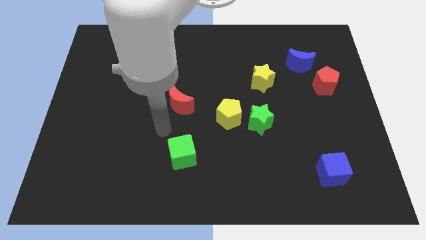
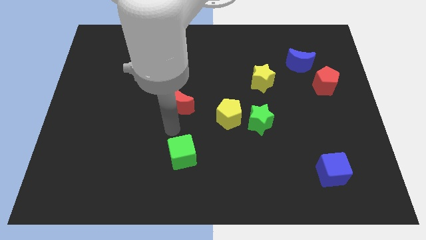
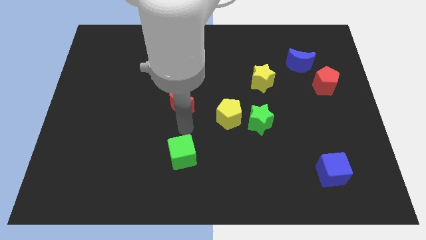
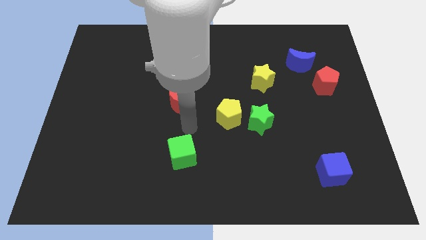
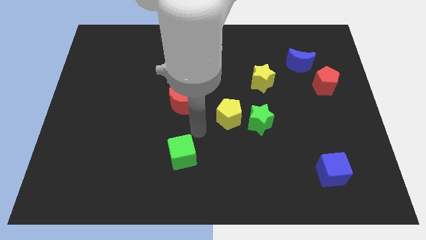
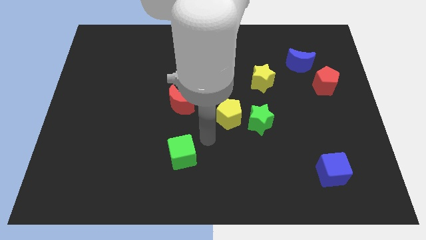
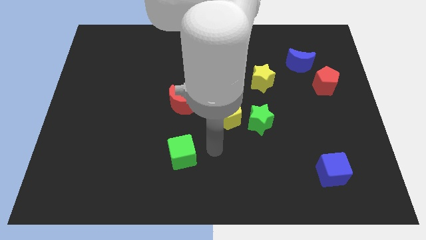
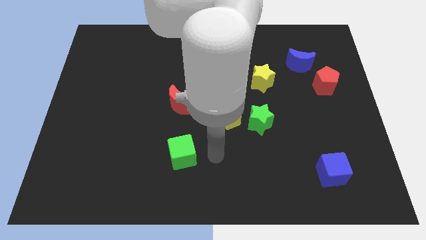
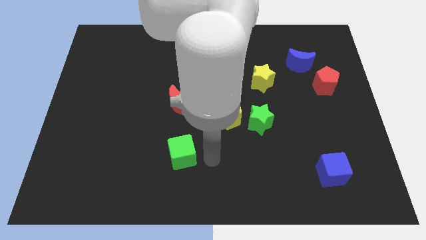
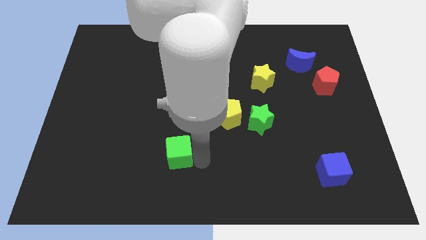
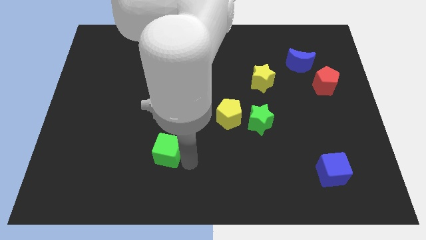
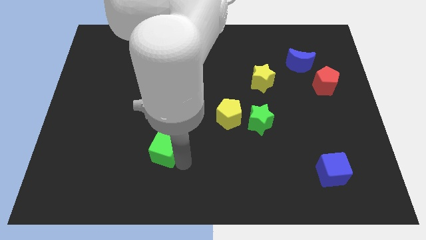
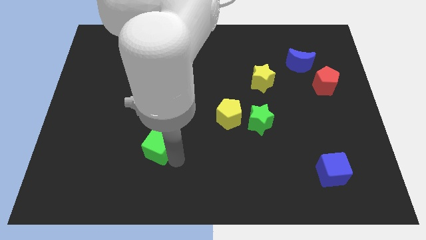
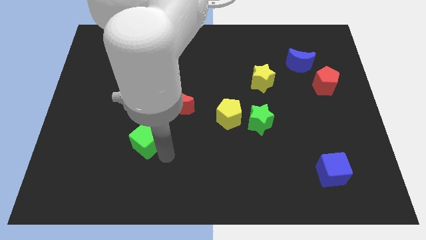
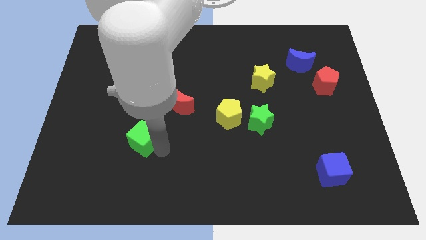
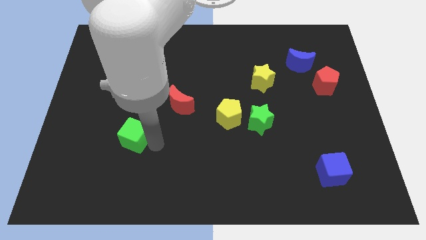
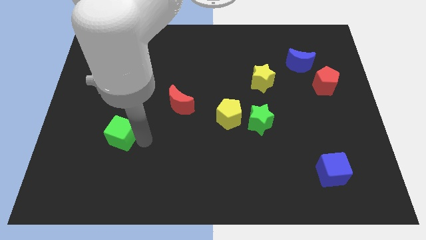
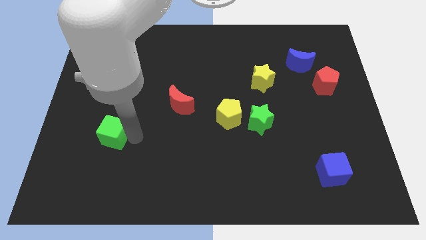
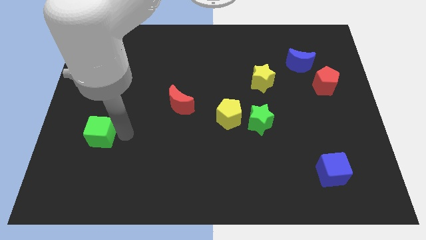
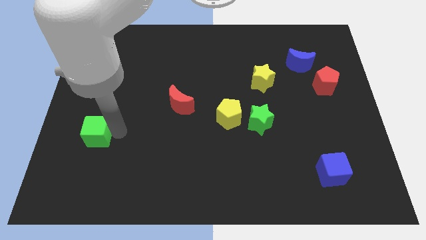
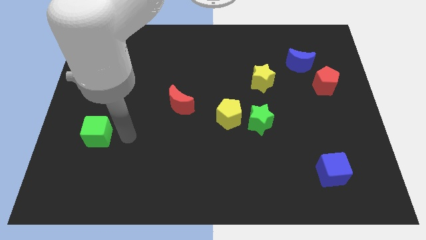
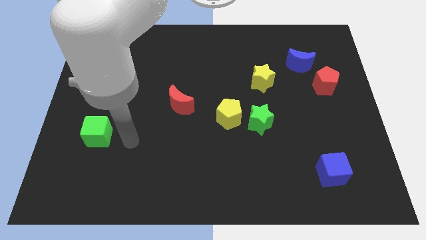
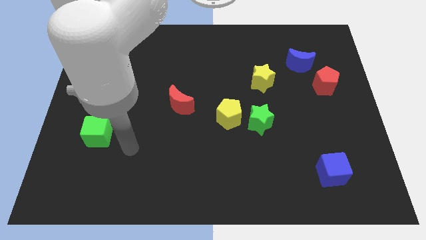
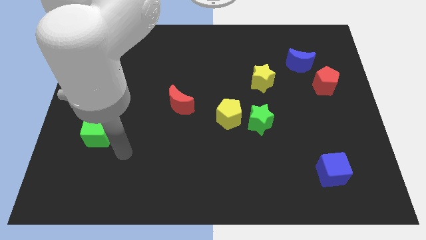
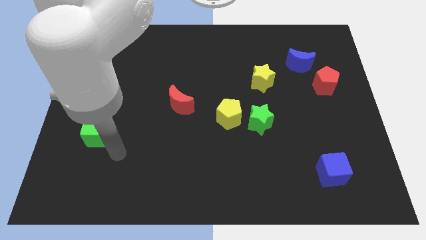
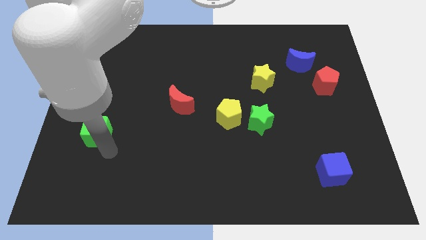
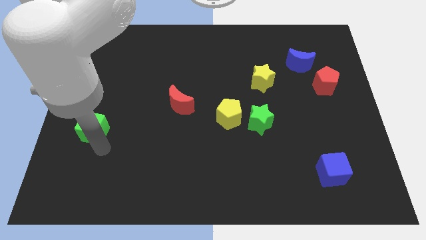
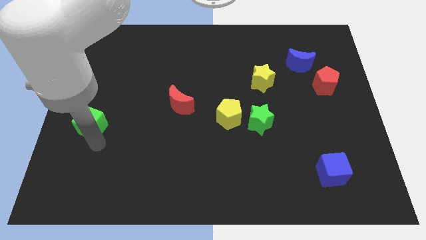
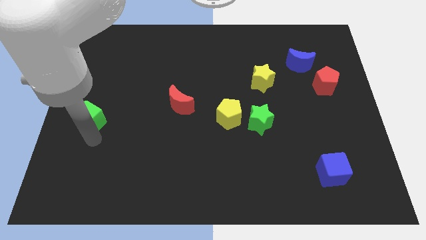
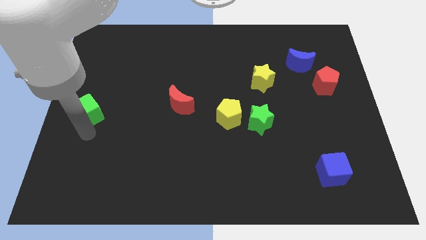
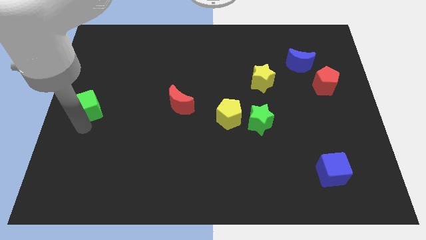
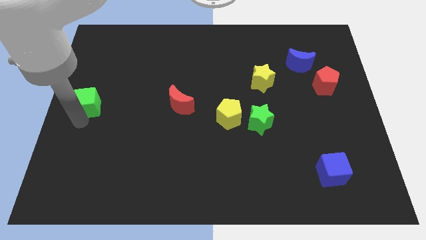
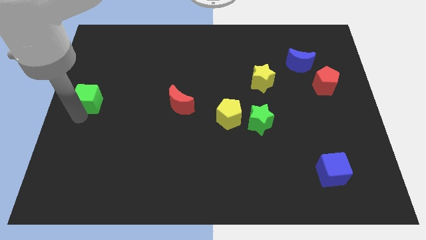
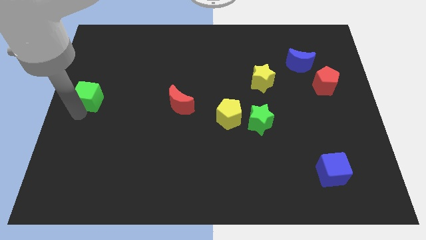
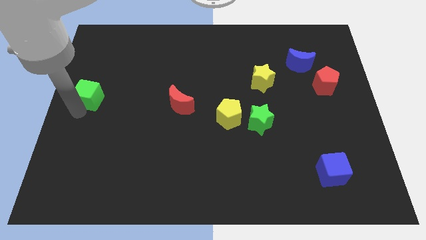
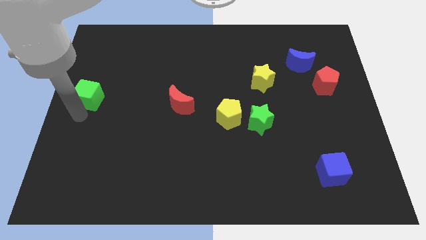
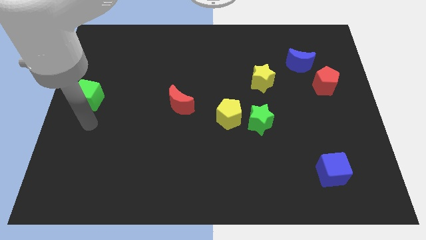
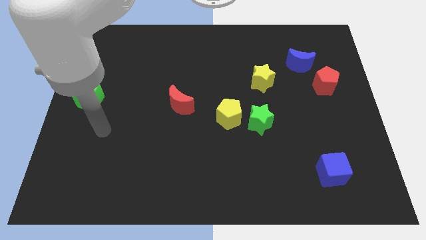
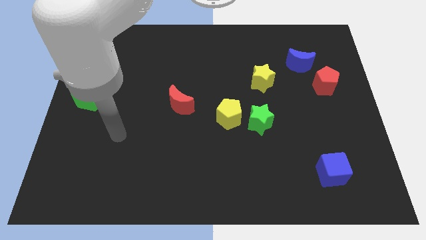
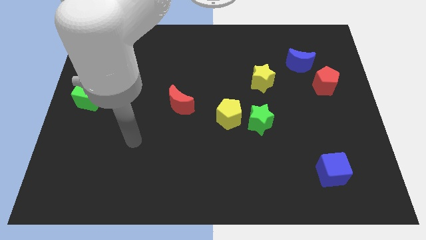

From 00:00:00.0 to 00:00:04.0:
move the green cube to the center left of the board

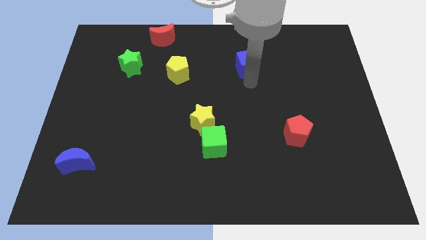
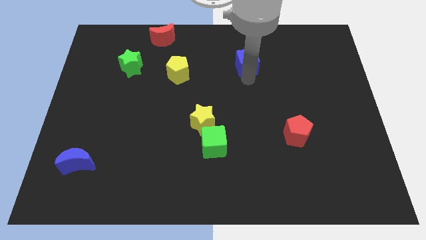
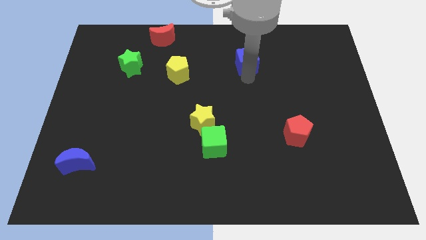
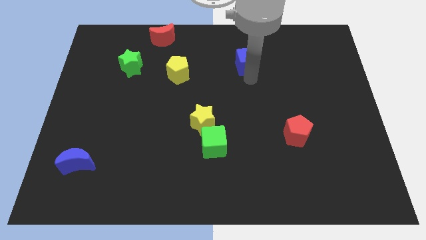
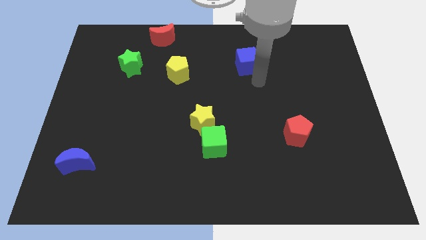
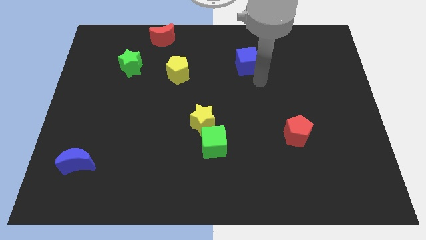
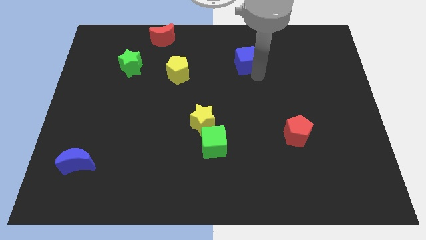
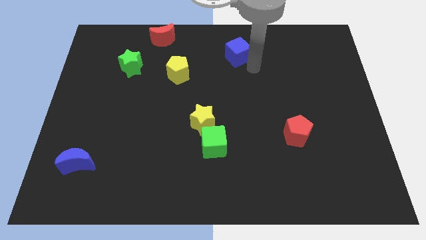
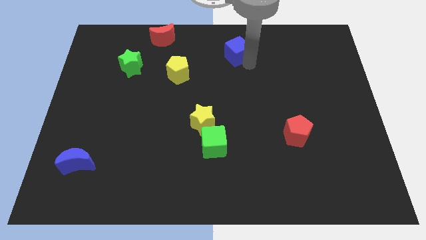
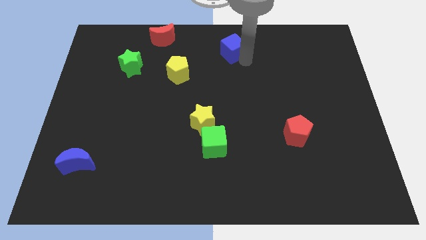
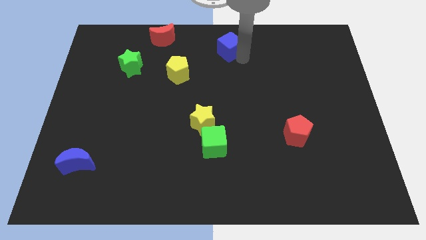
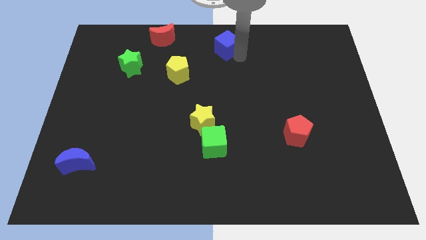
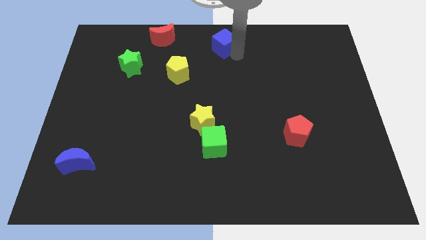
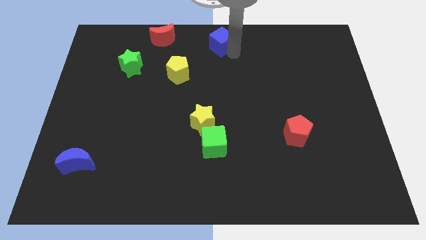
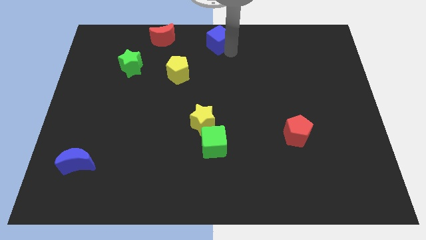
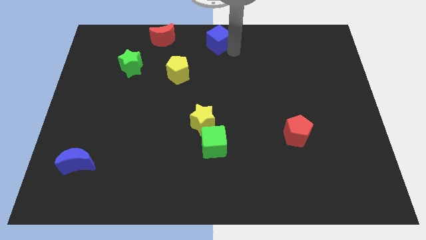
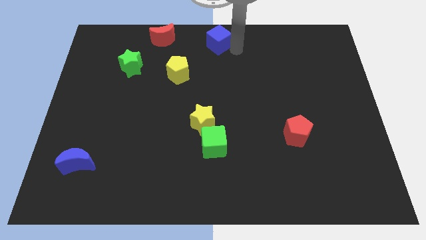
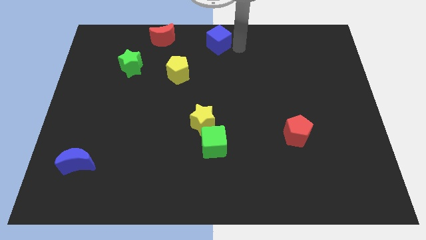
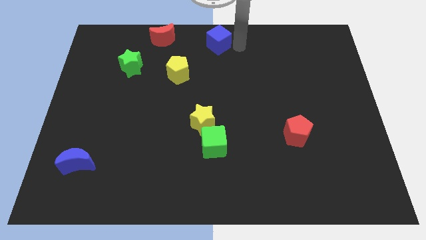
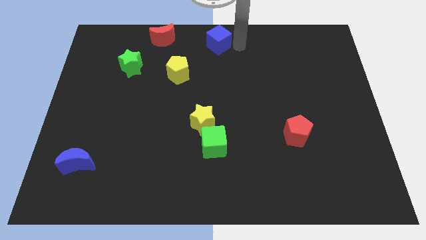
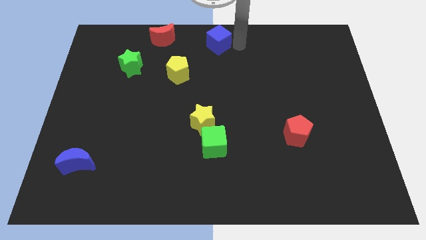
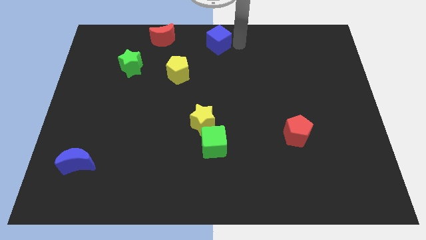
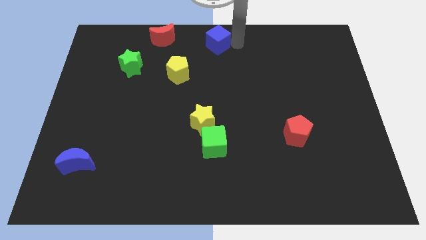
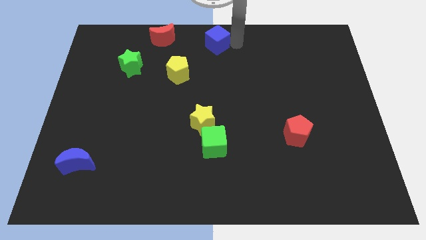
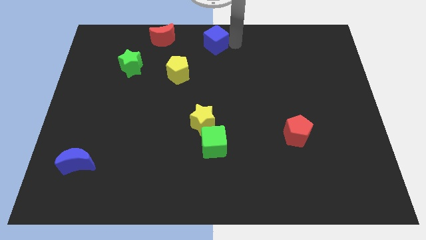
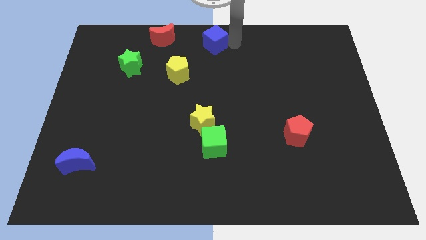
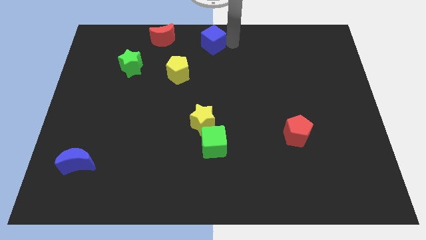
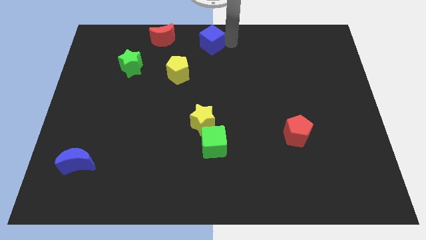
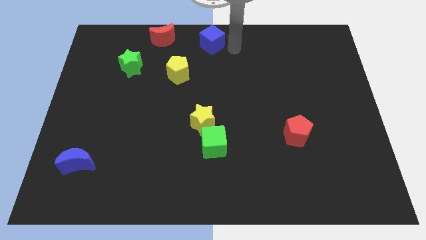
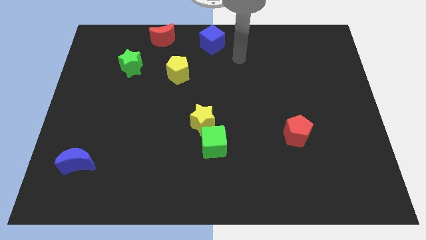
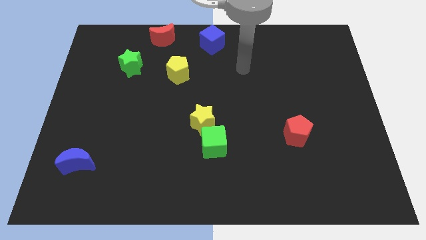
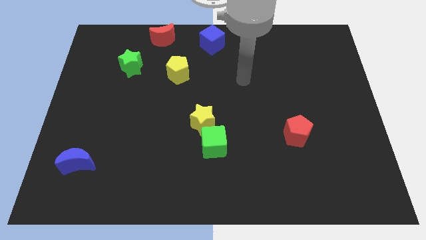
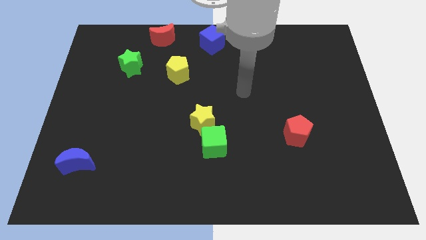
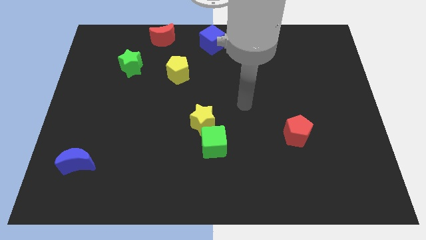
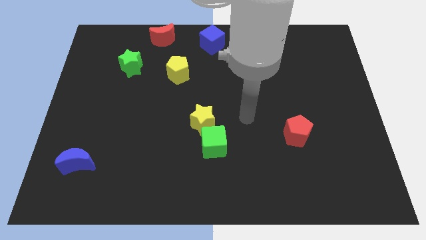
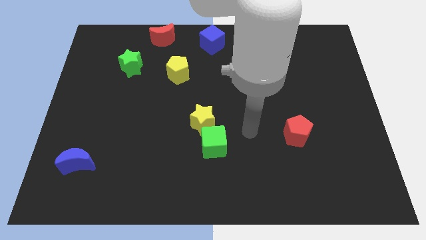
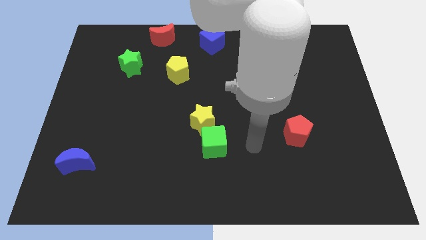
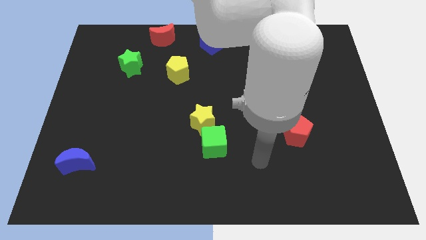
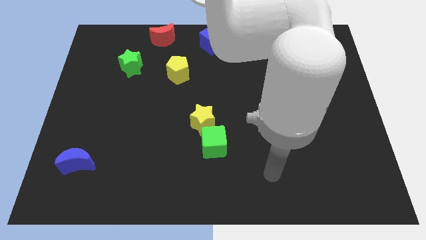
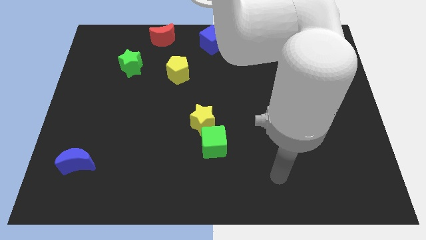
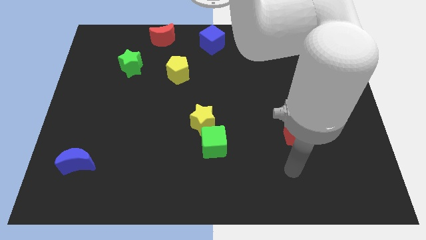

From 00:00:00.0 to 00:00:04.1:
move the blue cube to the right of the red crescent

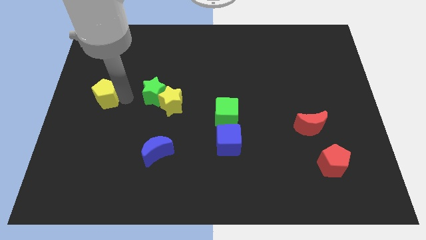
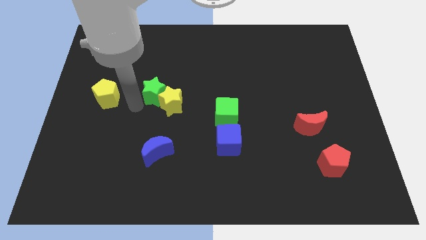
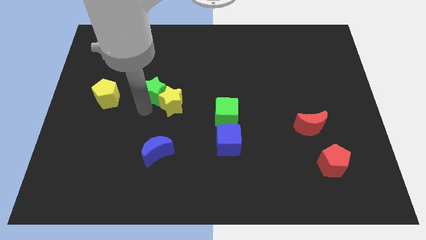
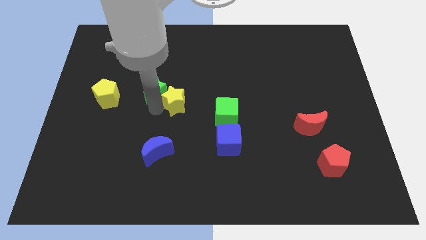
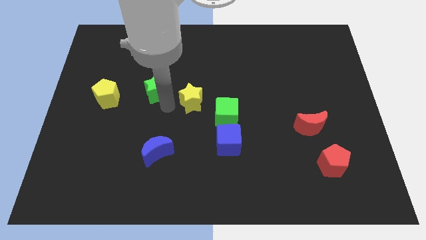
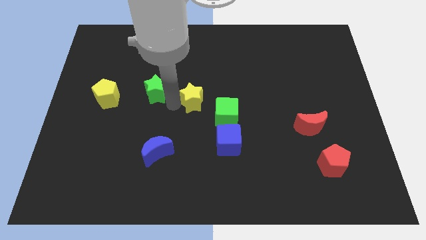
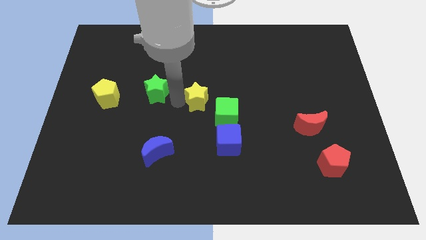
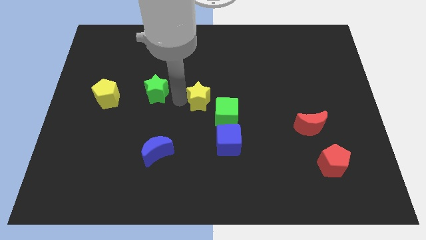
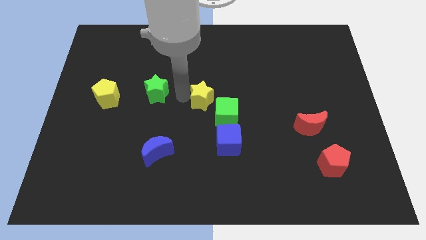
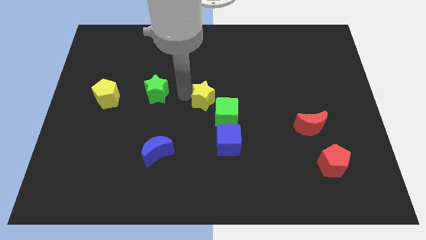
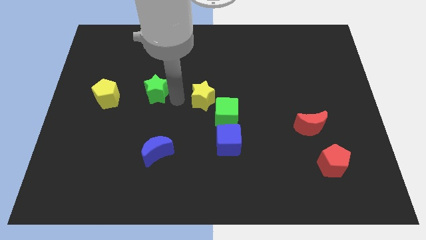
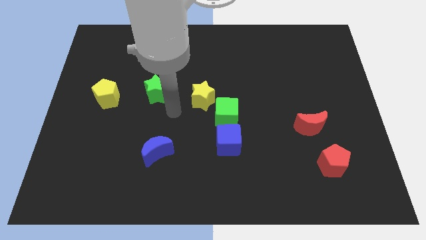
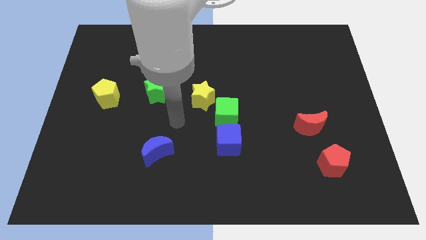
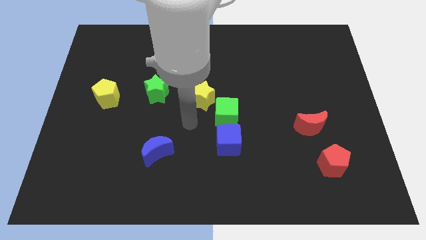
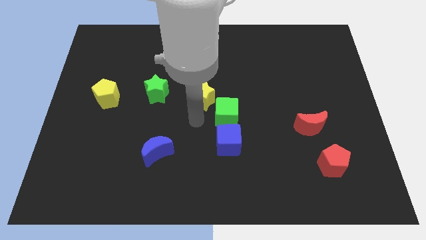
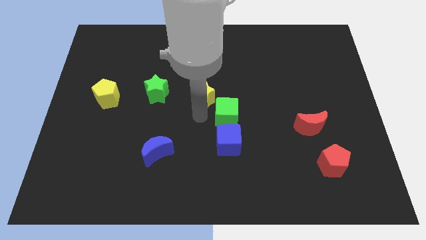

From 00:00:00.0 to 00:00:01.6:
place yellow star to the right of green star
